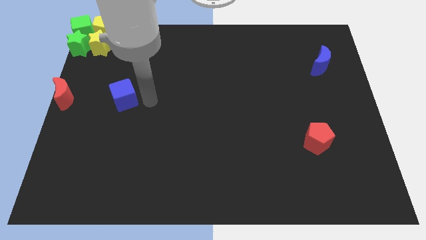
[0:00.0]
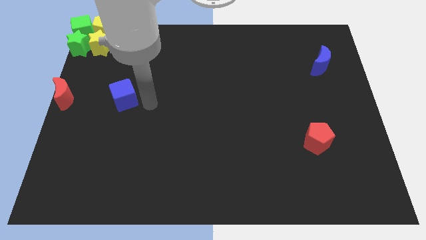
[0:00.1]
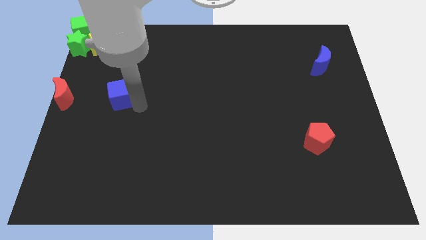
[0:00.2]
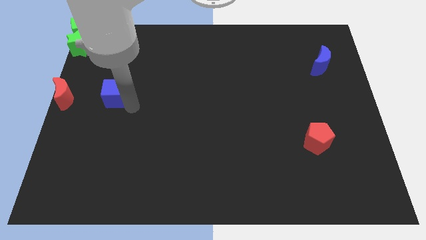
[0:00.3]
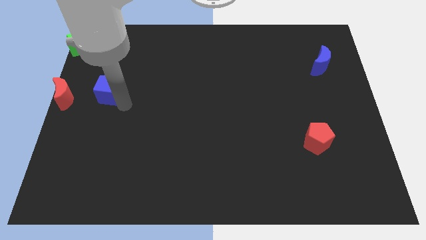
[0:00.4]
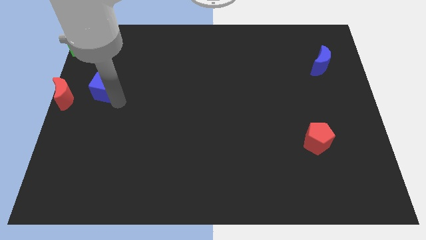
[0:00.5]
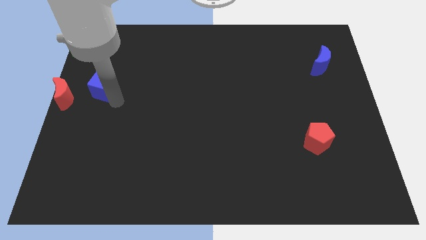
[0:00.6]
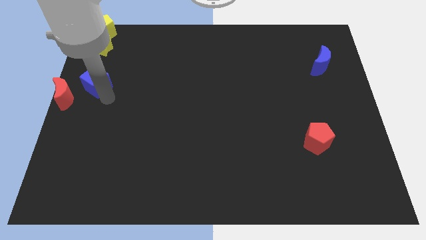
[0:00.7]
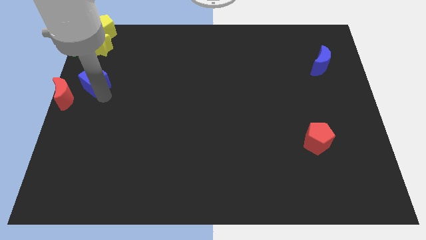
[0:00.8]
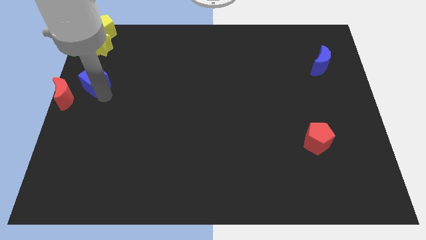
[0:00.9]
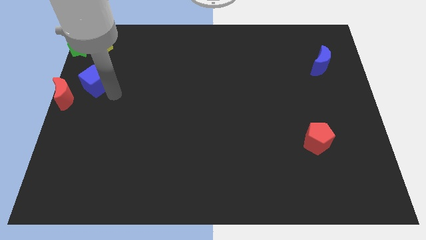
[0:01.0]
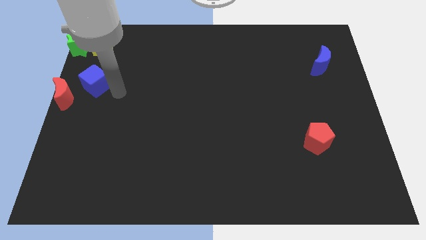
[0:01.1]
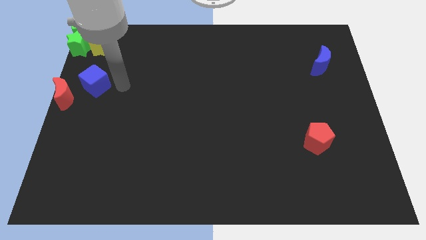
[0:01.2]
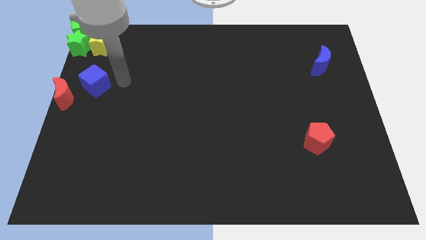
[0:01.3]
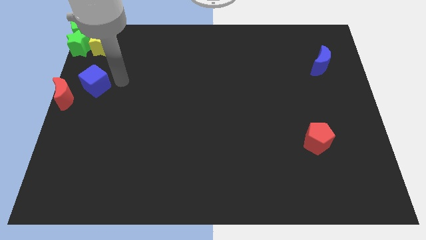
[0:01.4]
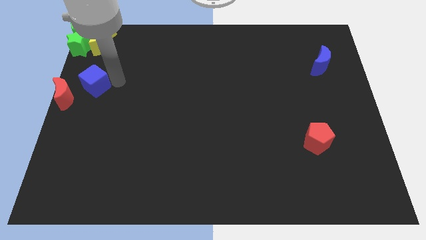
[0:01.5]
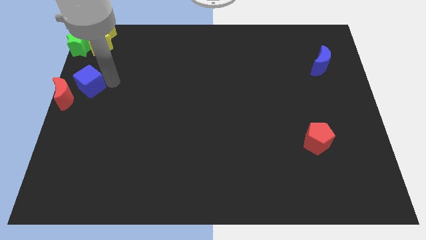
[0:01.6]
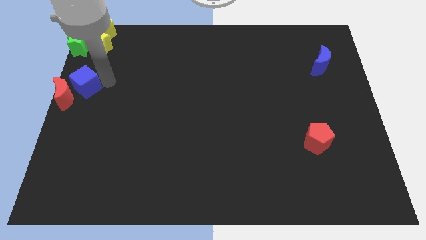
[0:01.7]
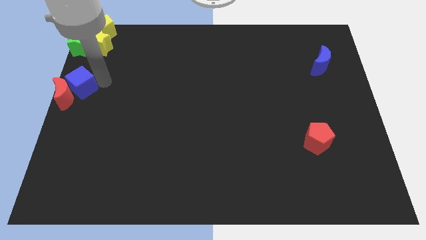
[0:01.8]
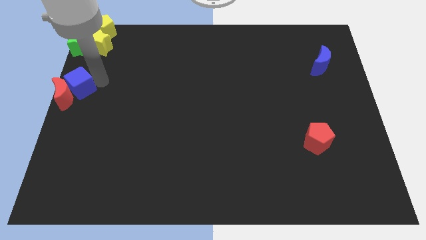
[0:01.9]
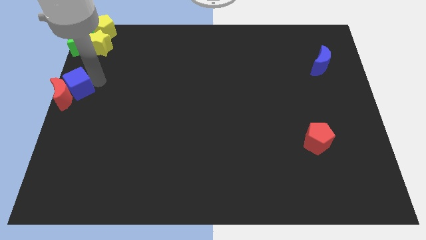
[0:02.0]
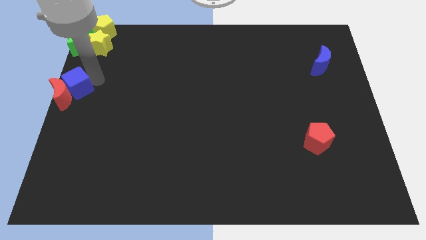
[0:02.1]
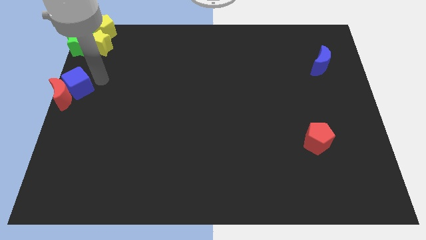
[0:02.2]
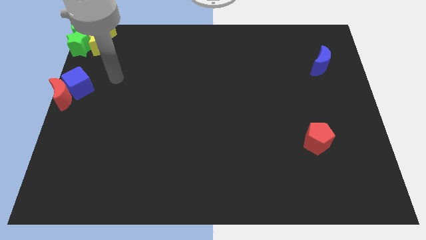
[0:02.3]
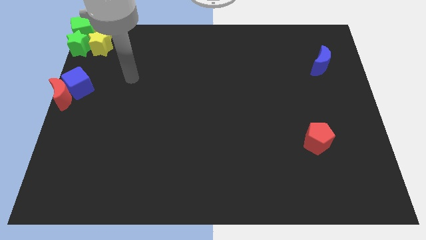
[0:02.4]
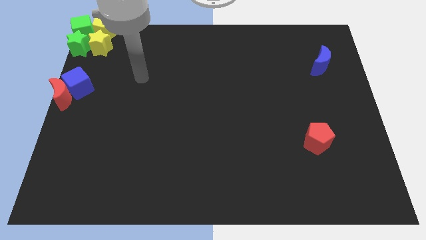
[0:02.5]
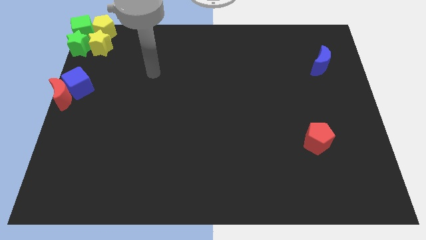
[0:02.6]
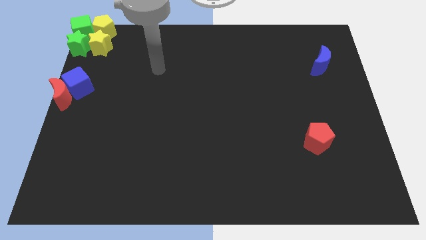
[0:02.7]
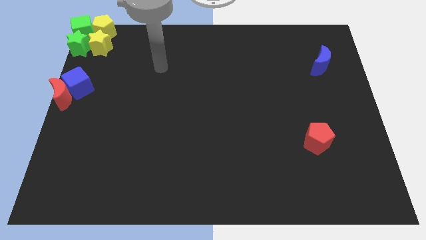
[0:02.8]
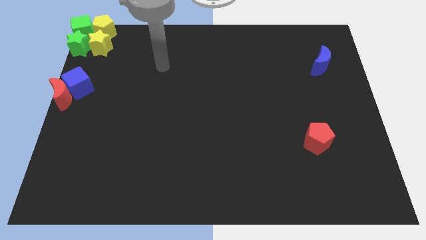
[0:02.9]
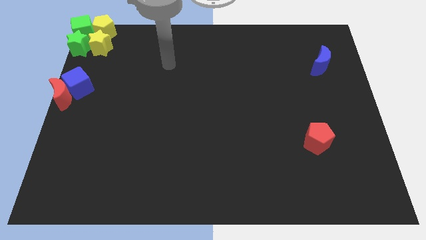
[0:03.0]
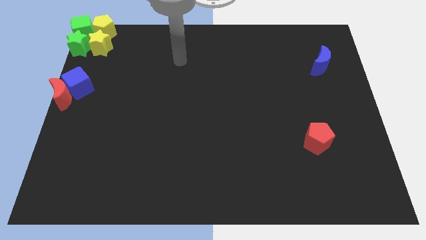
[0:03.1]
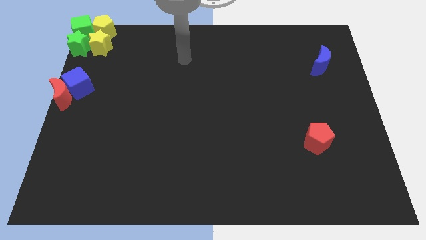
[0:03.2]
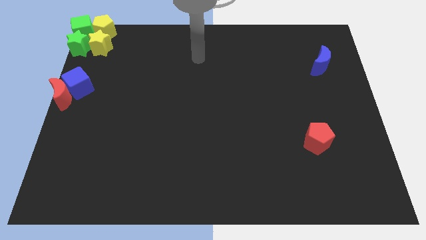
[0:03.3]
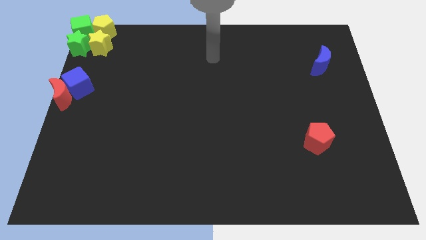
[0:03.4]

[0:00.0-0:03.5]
move blue cube beside the red crescent

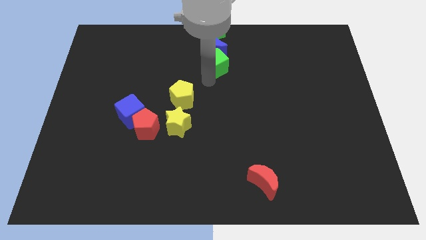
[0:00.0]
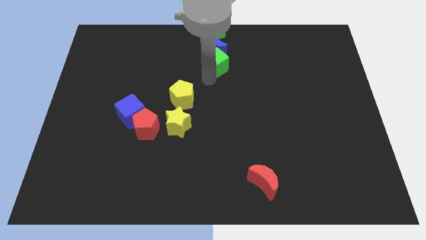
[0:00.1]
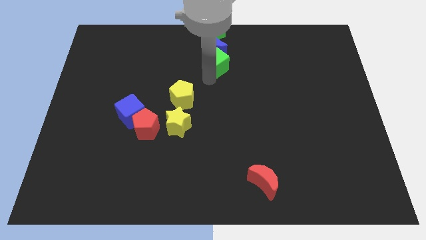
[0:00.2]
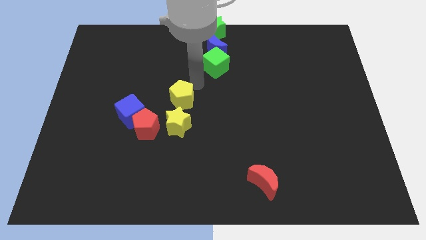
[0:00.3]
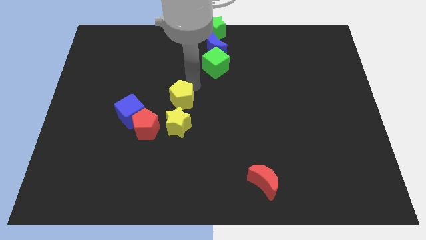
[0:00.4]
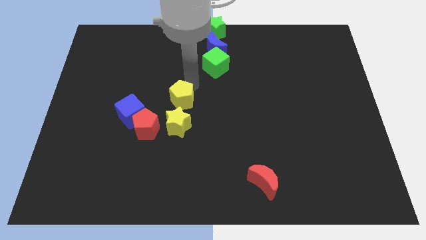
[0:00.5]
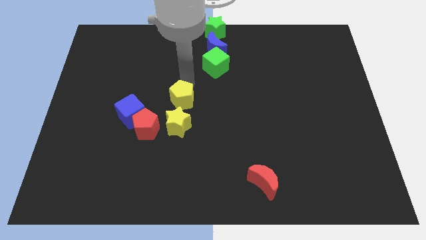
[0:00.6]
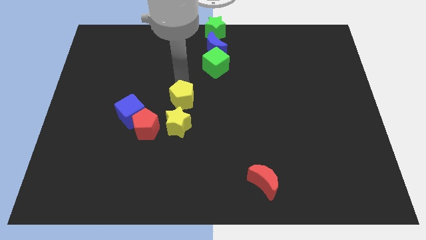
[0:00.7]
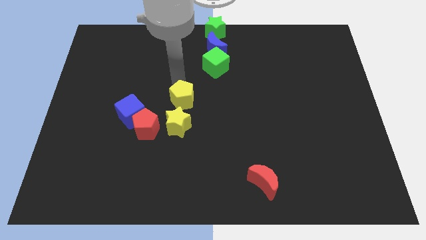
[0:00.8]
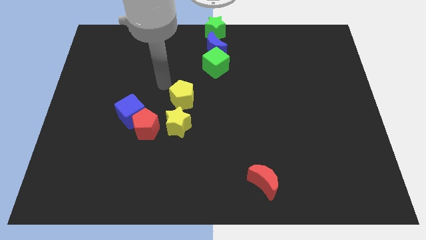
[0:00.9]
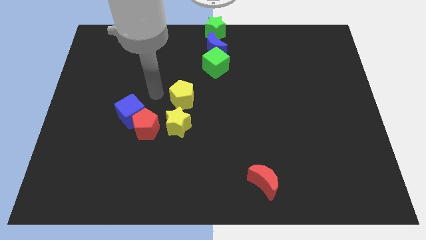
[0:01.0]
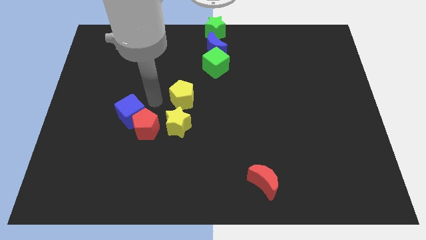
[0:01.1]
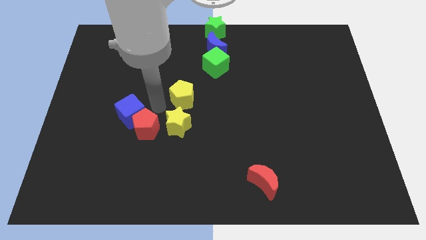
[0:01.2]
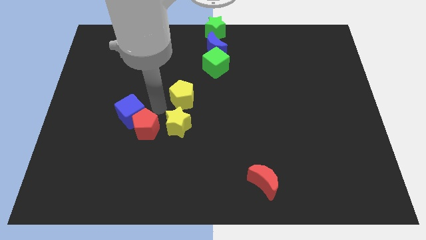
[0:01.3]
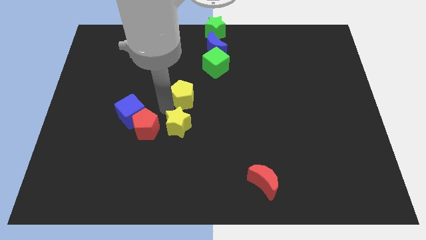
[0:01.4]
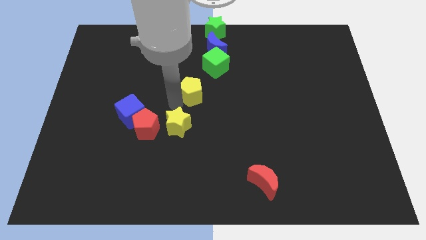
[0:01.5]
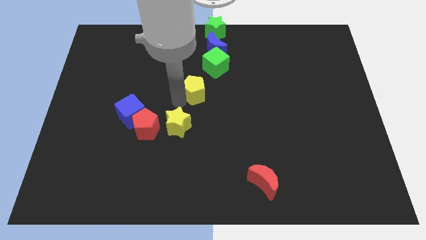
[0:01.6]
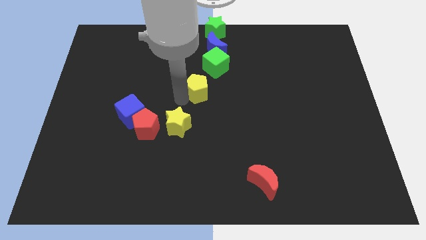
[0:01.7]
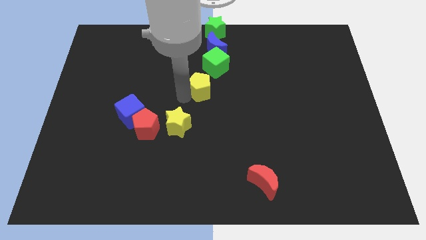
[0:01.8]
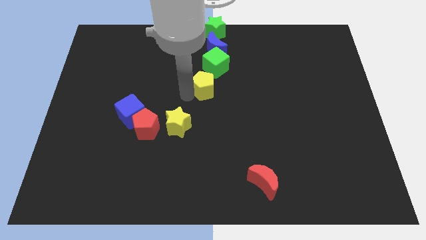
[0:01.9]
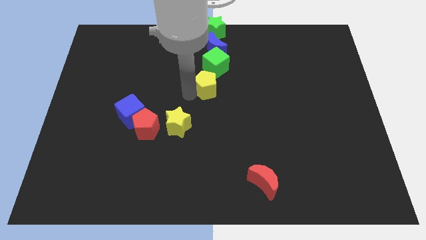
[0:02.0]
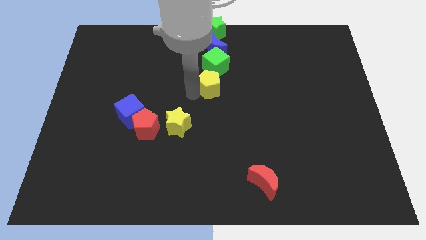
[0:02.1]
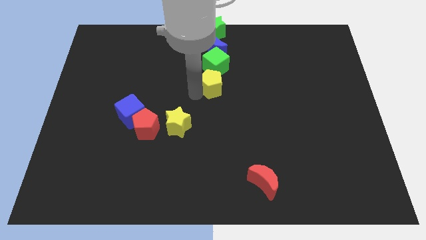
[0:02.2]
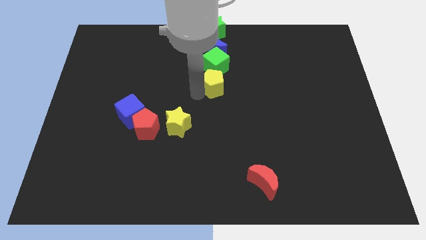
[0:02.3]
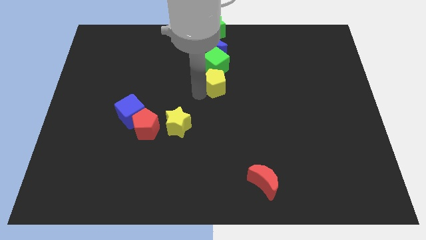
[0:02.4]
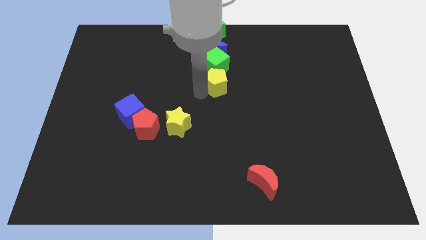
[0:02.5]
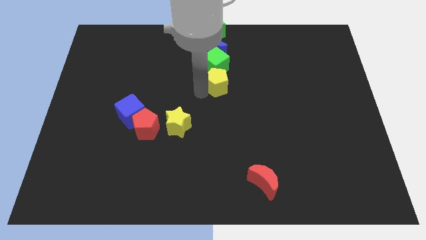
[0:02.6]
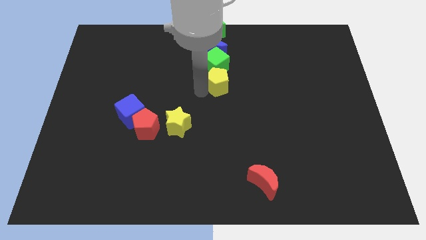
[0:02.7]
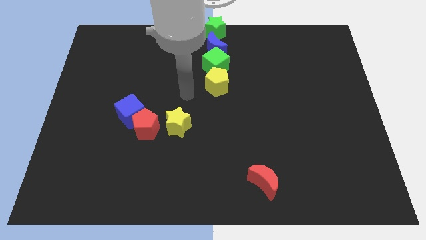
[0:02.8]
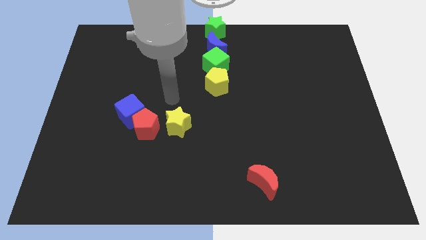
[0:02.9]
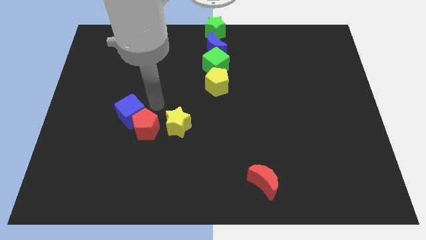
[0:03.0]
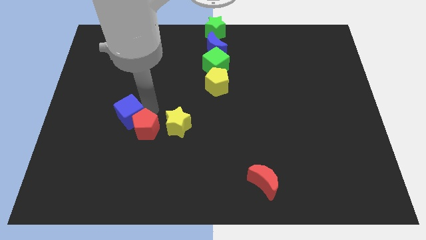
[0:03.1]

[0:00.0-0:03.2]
place yellow pentagon below green cube

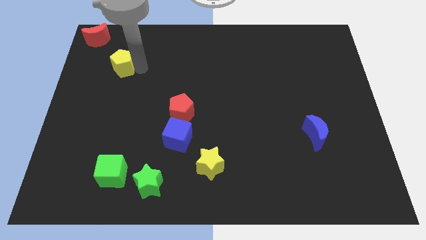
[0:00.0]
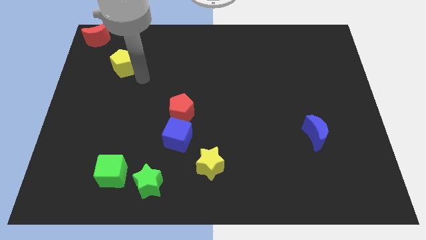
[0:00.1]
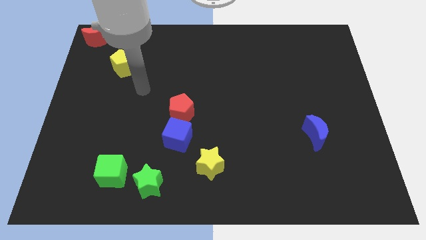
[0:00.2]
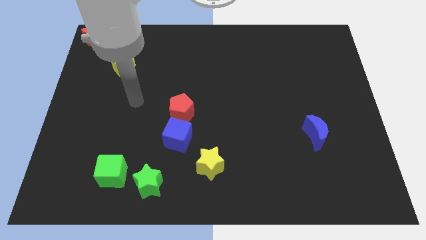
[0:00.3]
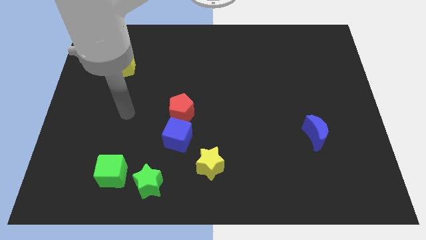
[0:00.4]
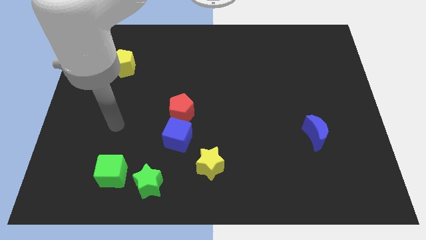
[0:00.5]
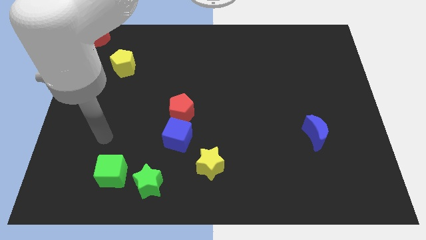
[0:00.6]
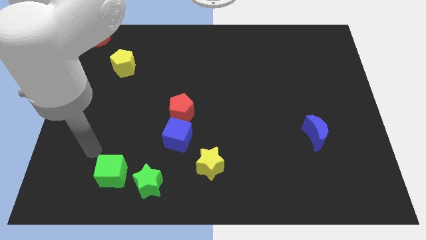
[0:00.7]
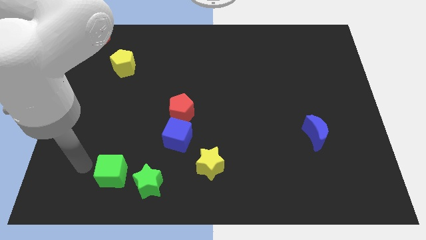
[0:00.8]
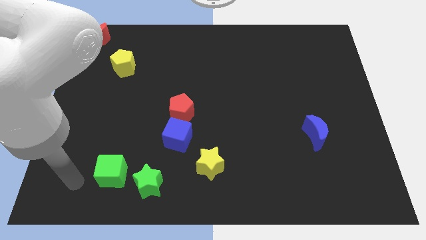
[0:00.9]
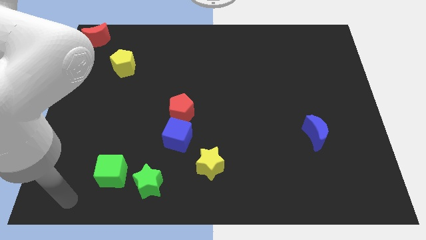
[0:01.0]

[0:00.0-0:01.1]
move your arm away from yellow pentagon

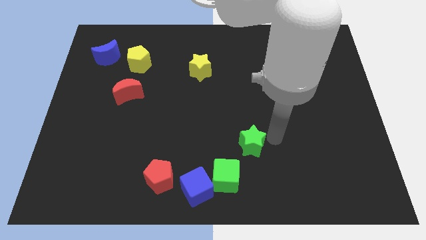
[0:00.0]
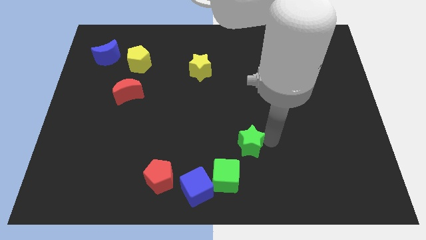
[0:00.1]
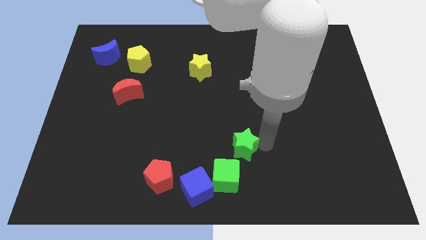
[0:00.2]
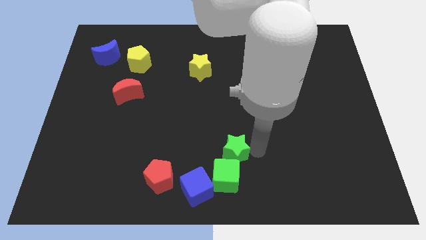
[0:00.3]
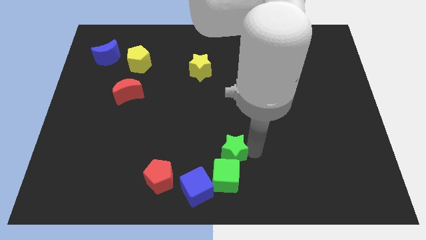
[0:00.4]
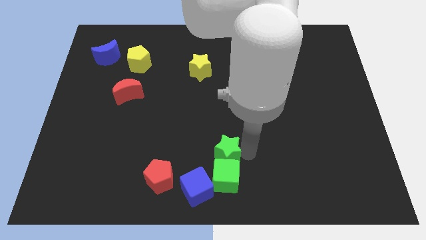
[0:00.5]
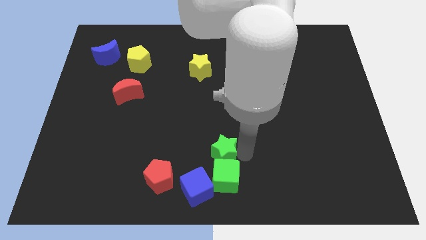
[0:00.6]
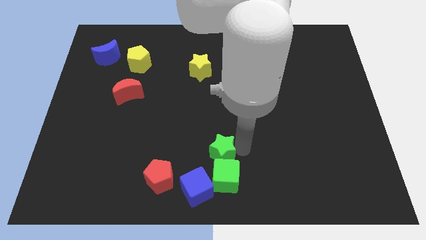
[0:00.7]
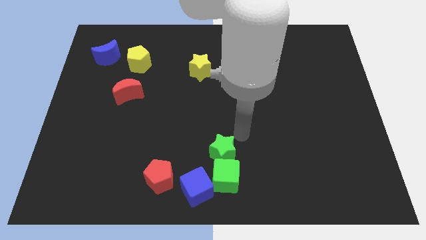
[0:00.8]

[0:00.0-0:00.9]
place the green star above the green cube

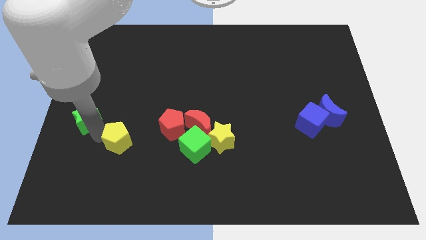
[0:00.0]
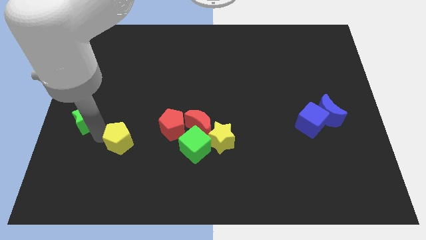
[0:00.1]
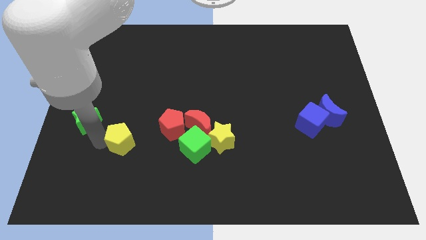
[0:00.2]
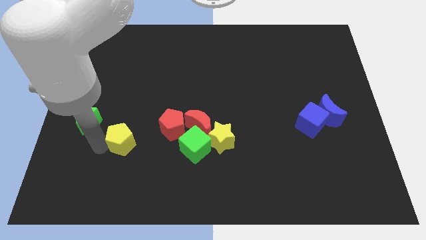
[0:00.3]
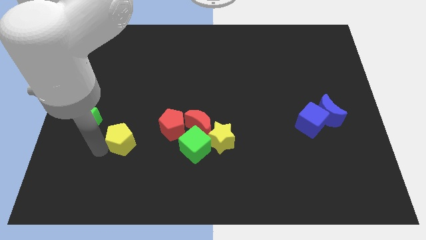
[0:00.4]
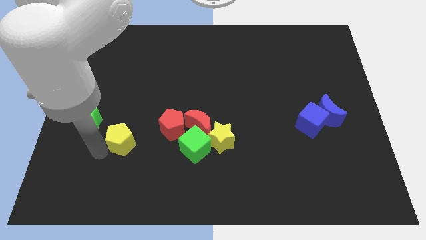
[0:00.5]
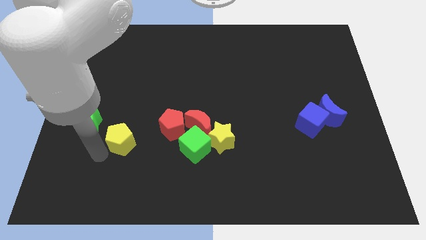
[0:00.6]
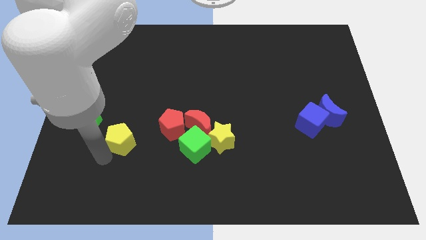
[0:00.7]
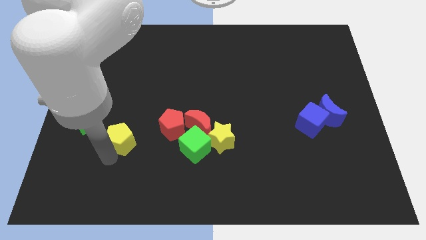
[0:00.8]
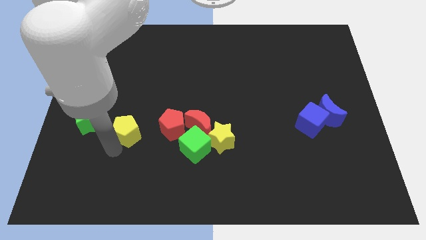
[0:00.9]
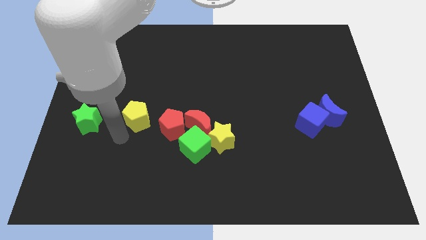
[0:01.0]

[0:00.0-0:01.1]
place yellow pentagon in between green star and red pentagon
